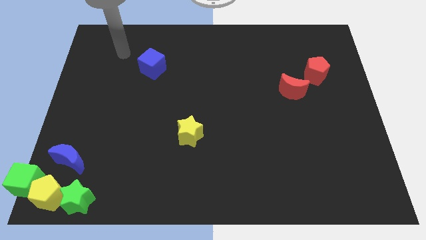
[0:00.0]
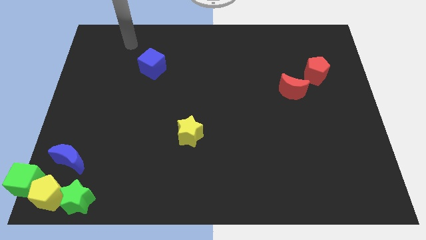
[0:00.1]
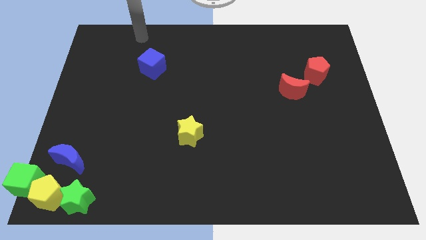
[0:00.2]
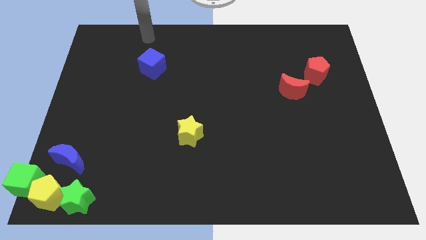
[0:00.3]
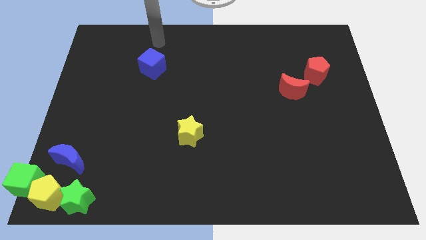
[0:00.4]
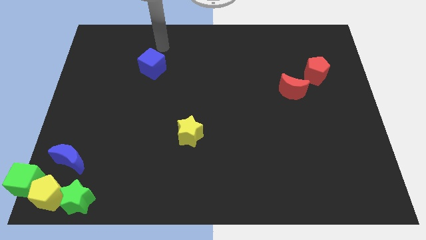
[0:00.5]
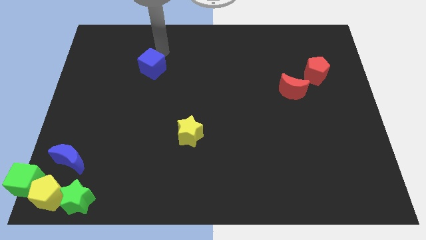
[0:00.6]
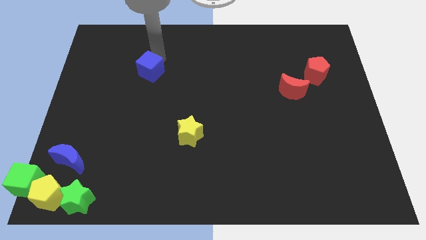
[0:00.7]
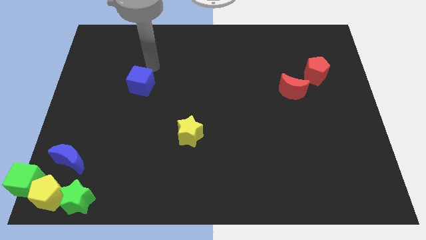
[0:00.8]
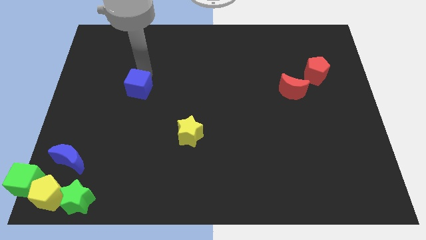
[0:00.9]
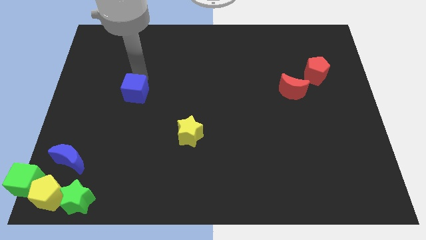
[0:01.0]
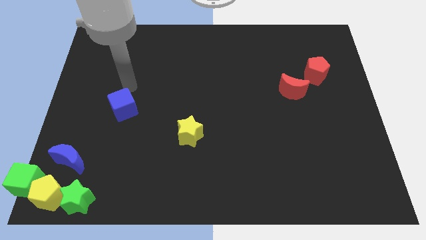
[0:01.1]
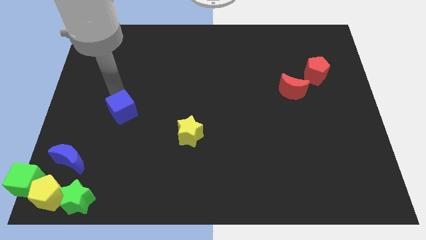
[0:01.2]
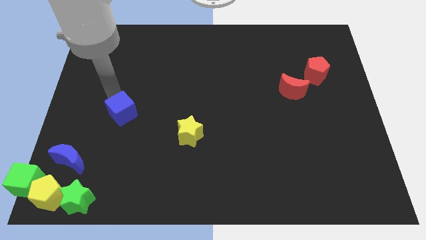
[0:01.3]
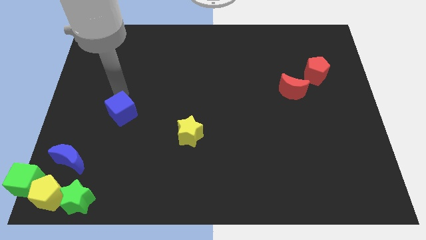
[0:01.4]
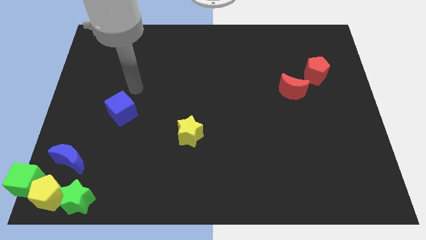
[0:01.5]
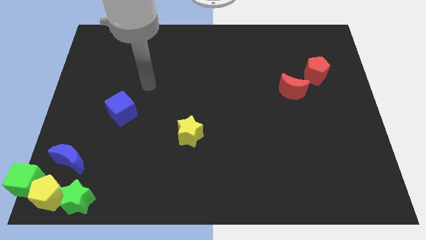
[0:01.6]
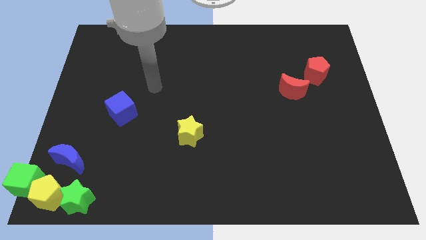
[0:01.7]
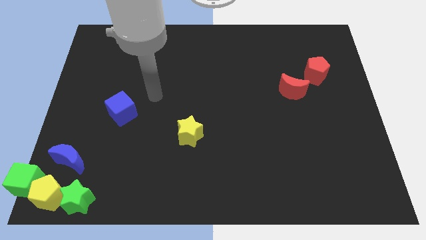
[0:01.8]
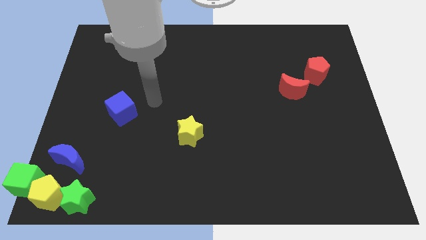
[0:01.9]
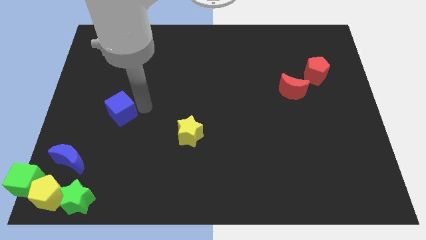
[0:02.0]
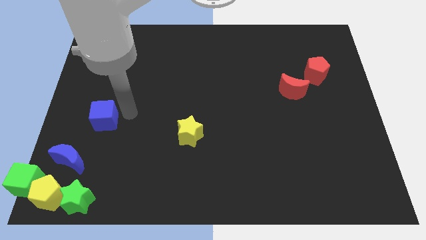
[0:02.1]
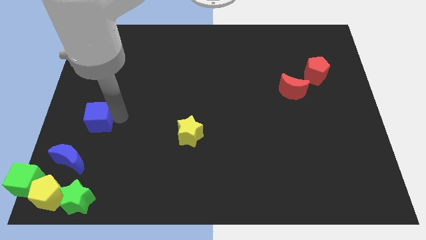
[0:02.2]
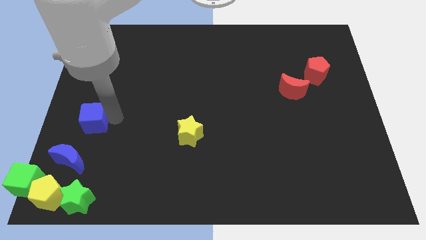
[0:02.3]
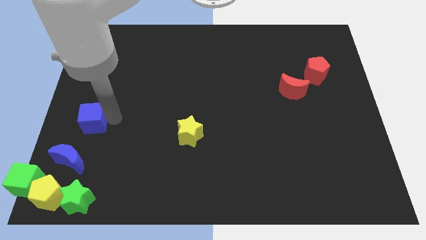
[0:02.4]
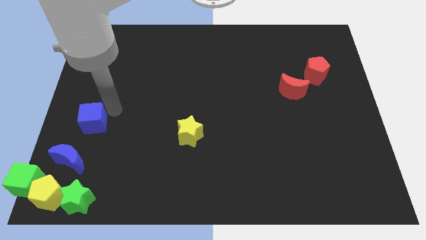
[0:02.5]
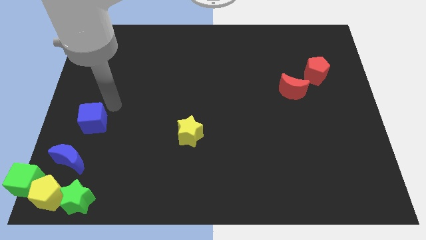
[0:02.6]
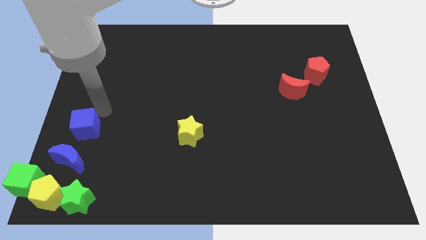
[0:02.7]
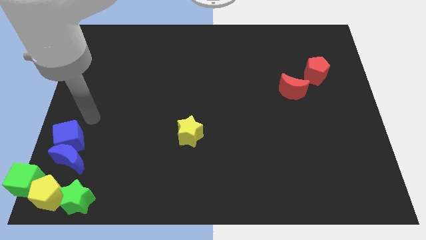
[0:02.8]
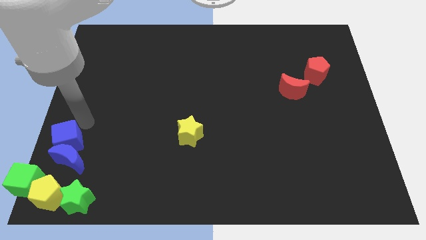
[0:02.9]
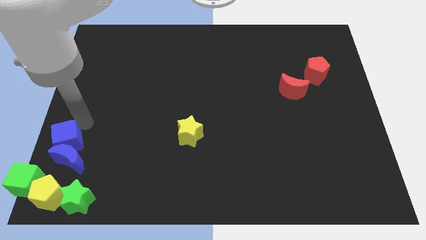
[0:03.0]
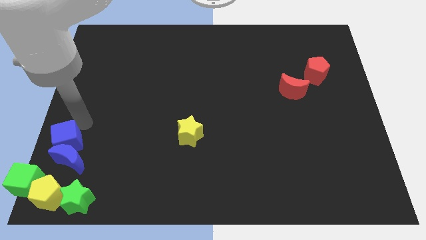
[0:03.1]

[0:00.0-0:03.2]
push the blue cube into the blue moon

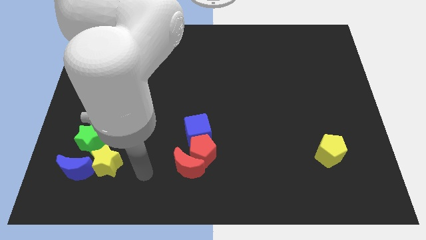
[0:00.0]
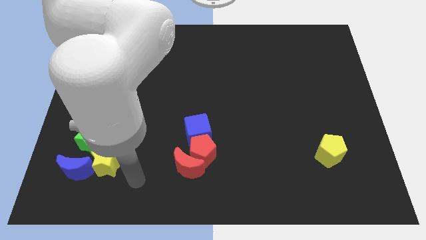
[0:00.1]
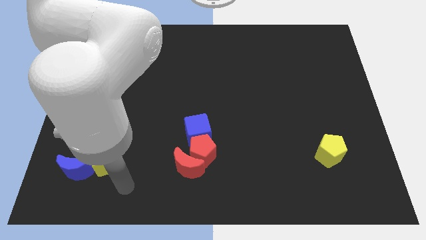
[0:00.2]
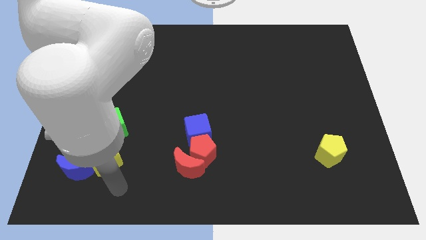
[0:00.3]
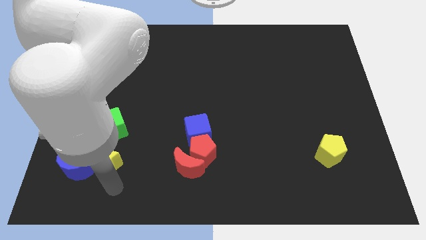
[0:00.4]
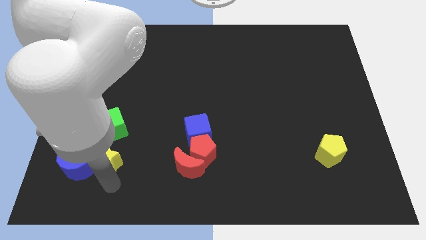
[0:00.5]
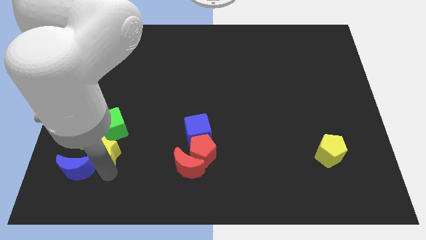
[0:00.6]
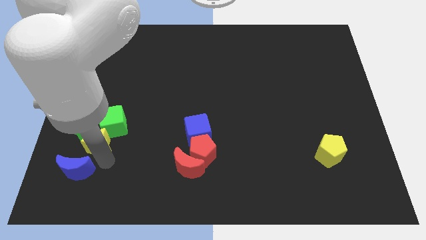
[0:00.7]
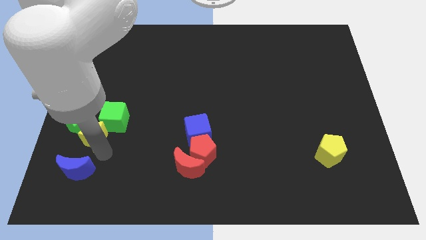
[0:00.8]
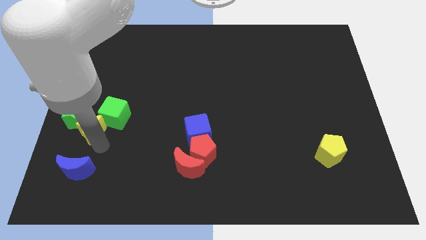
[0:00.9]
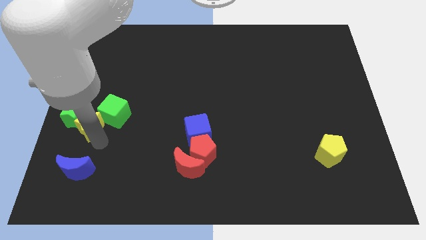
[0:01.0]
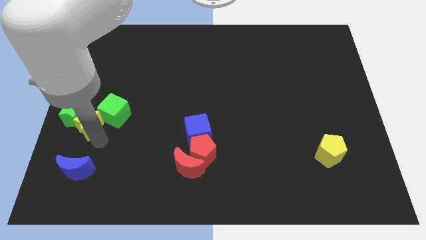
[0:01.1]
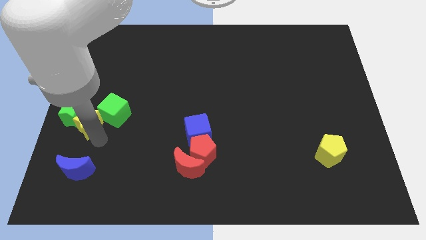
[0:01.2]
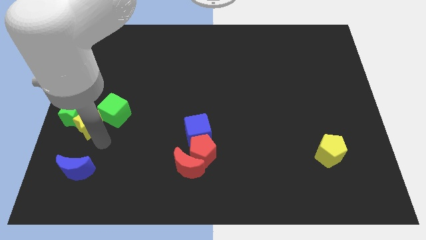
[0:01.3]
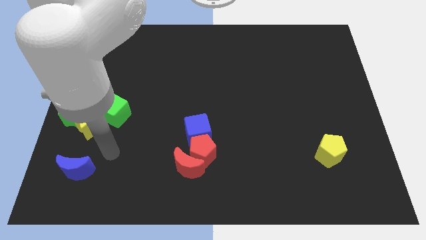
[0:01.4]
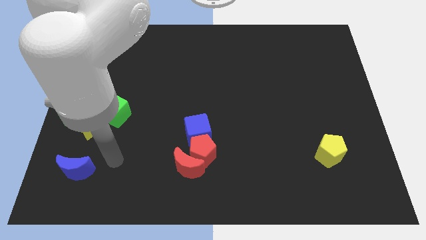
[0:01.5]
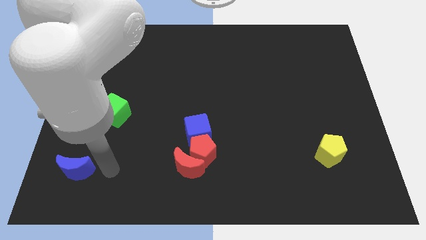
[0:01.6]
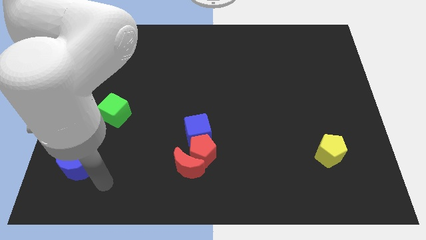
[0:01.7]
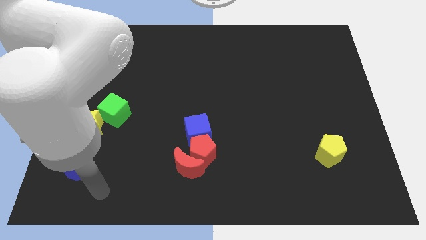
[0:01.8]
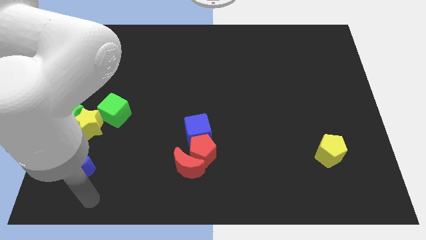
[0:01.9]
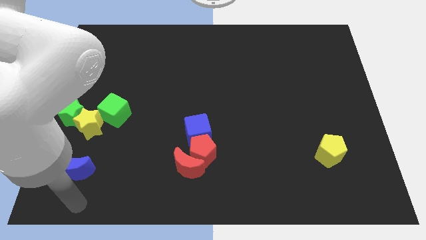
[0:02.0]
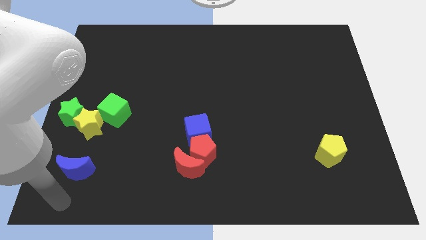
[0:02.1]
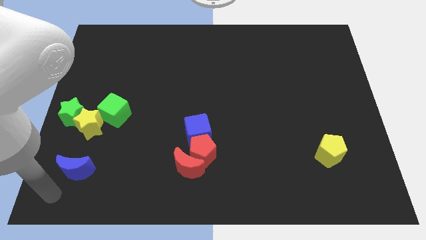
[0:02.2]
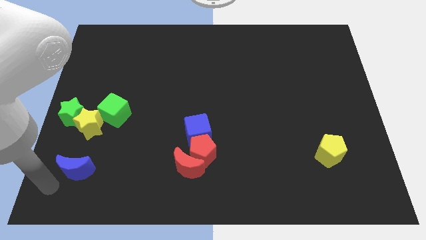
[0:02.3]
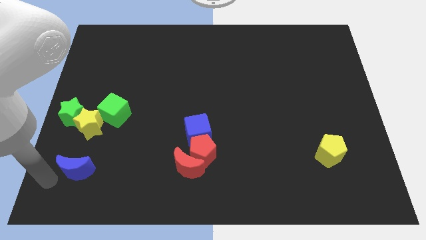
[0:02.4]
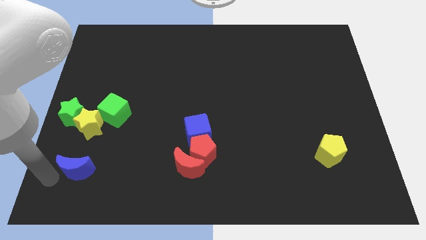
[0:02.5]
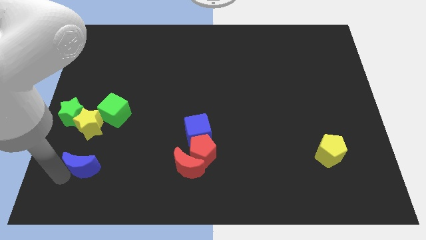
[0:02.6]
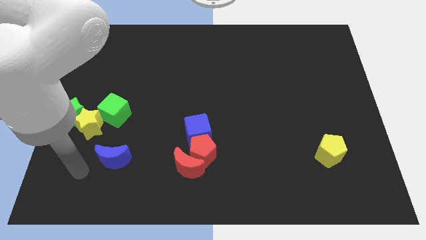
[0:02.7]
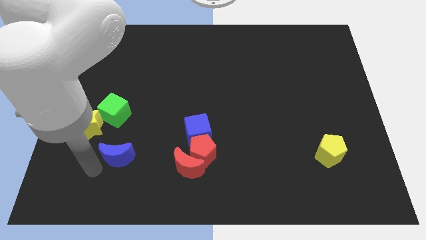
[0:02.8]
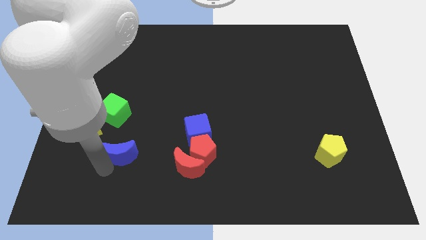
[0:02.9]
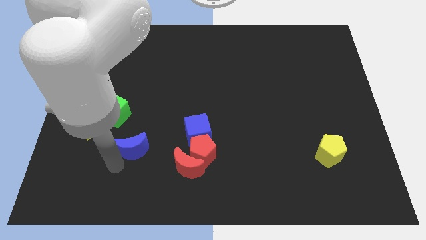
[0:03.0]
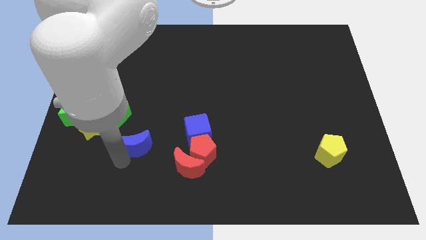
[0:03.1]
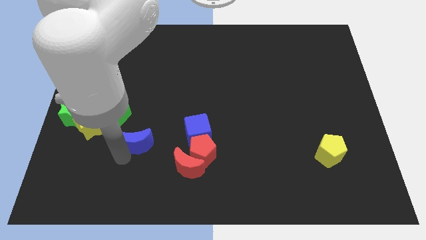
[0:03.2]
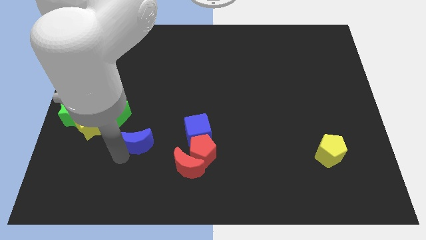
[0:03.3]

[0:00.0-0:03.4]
move the group of blocks to the left center of the board

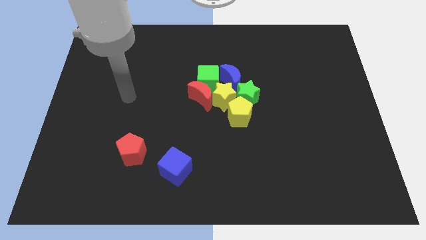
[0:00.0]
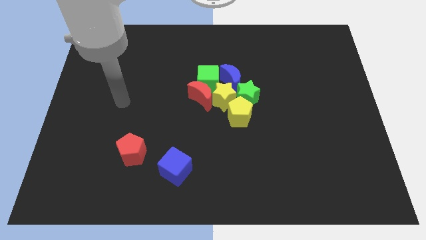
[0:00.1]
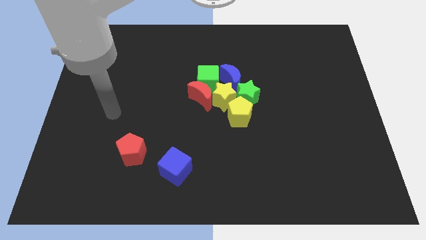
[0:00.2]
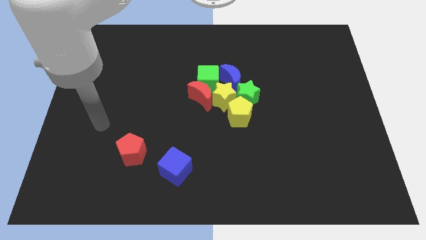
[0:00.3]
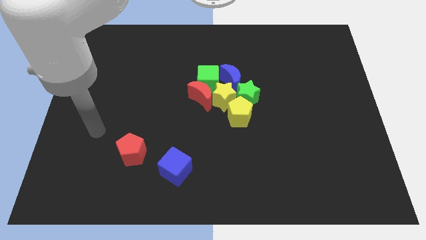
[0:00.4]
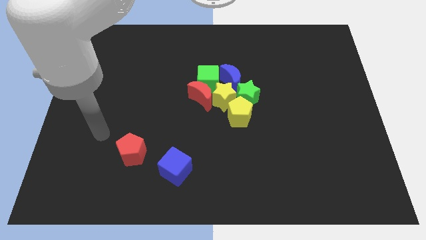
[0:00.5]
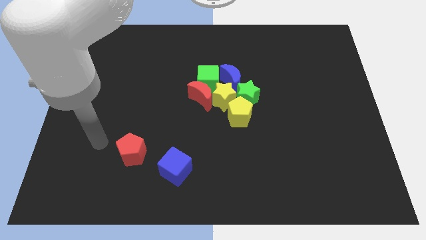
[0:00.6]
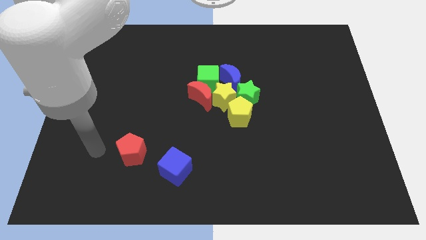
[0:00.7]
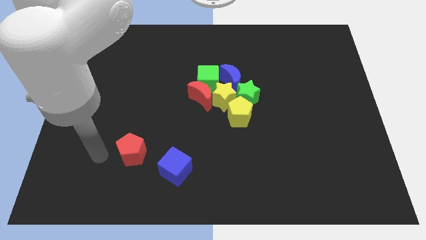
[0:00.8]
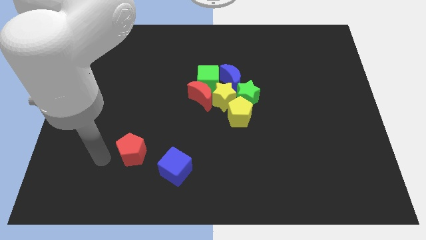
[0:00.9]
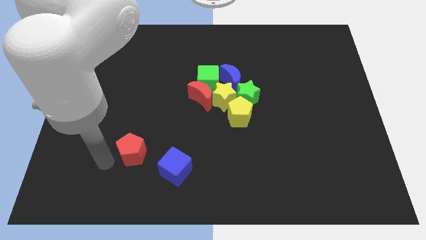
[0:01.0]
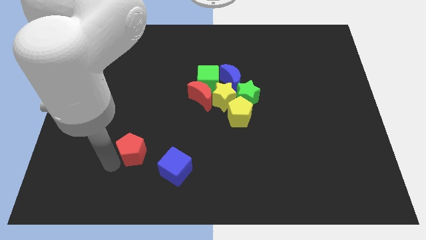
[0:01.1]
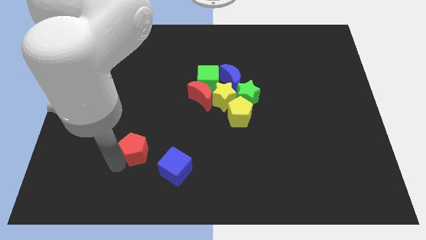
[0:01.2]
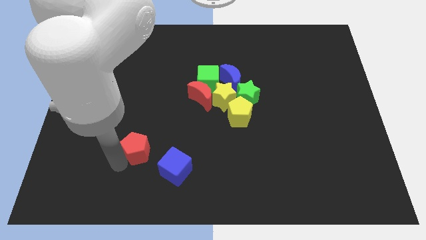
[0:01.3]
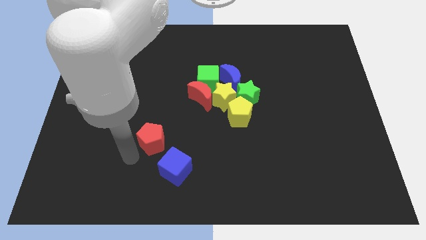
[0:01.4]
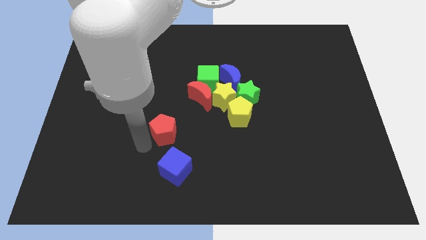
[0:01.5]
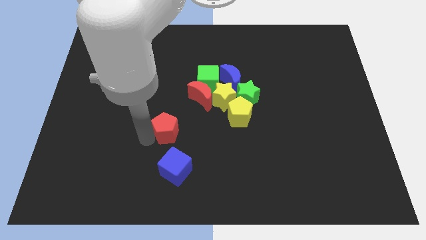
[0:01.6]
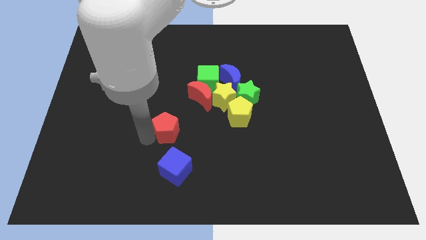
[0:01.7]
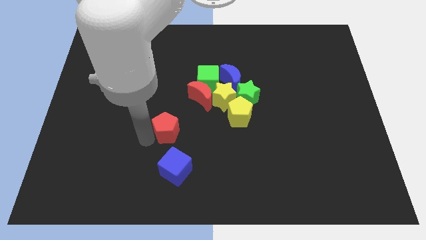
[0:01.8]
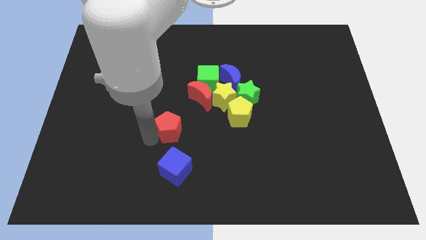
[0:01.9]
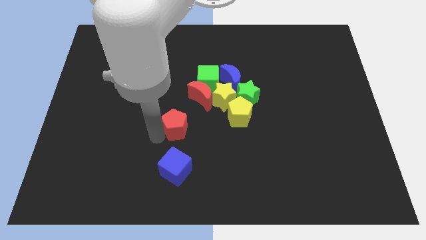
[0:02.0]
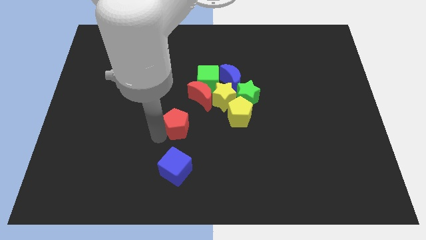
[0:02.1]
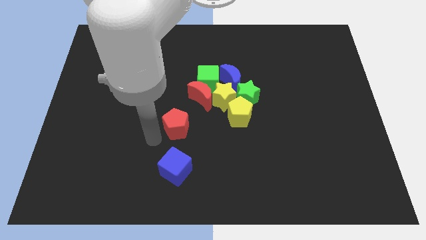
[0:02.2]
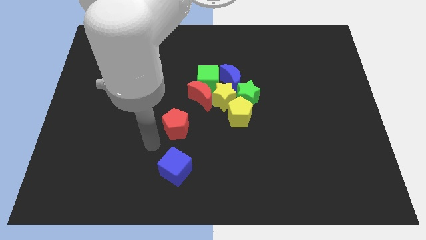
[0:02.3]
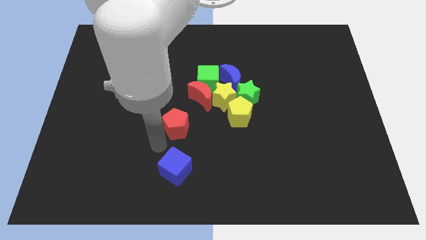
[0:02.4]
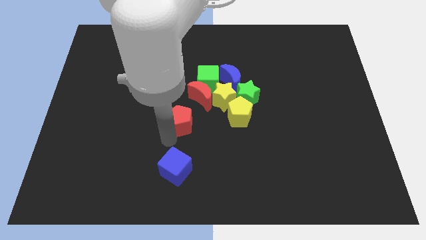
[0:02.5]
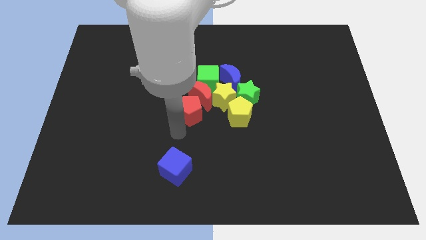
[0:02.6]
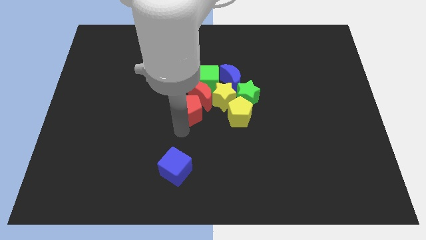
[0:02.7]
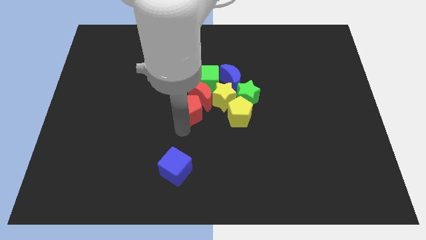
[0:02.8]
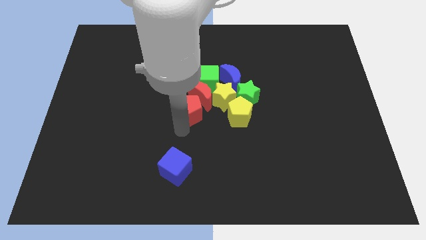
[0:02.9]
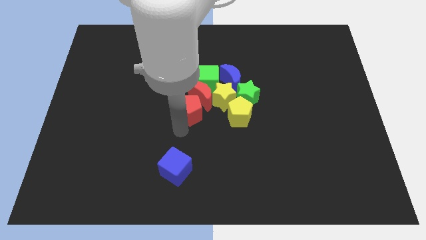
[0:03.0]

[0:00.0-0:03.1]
place red pentagon at the bottom of the red moon
